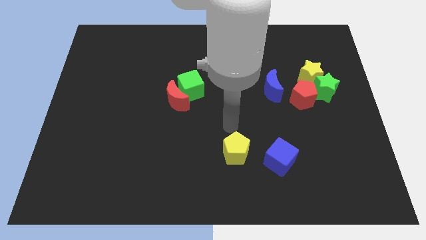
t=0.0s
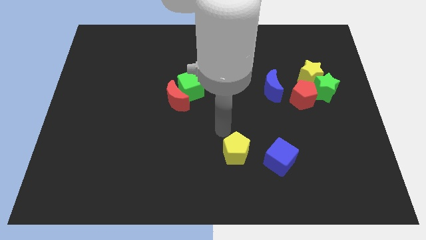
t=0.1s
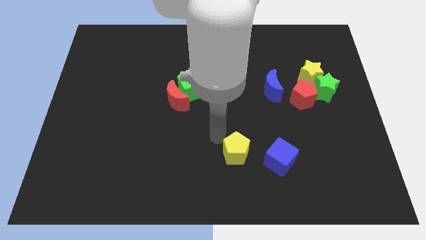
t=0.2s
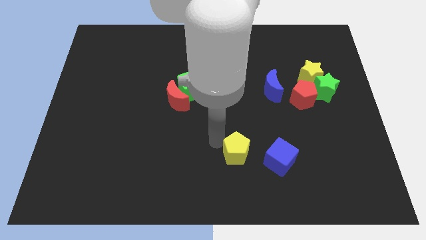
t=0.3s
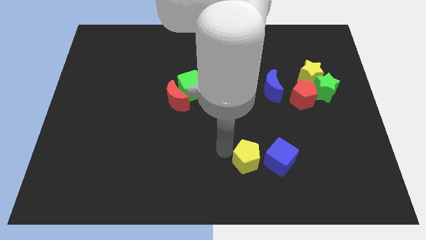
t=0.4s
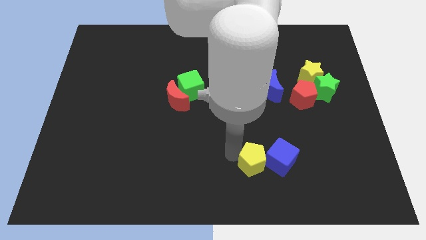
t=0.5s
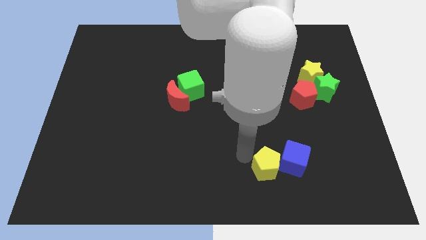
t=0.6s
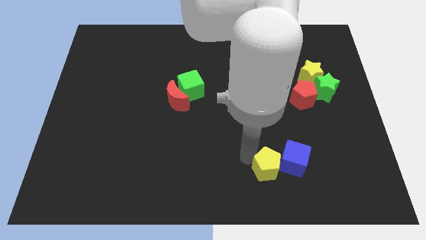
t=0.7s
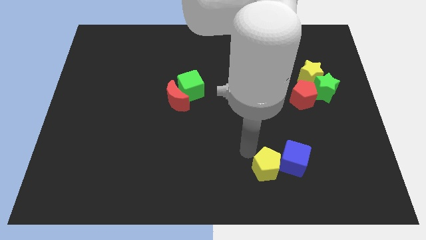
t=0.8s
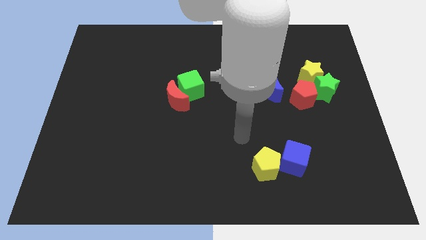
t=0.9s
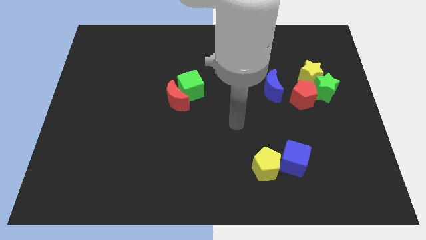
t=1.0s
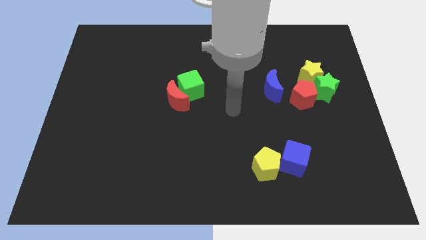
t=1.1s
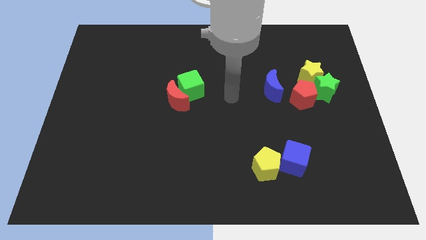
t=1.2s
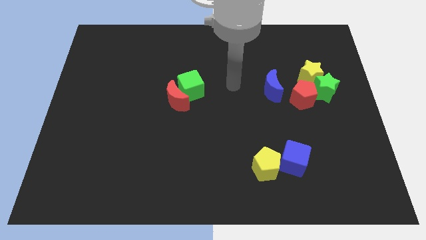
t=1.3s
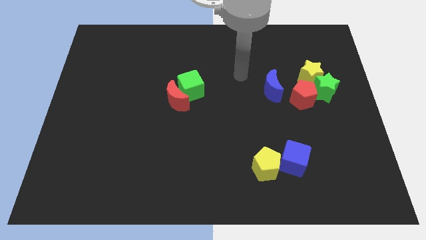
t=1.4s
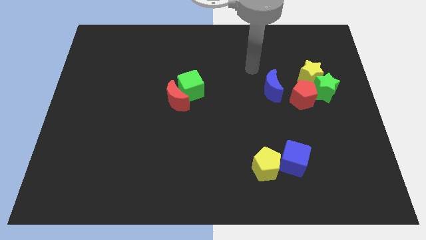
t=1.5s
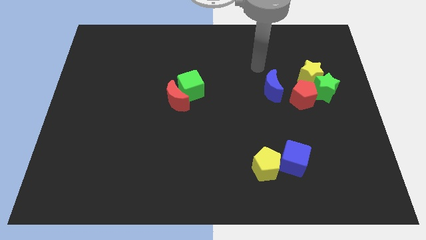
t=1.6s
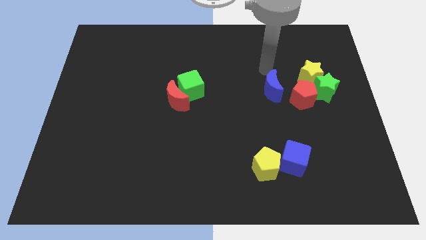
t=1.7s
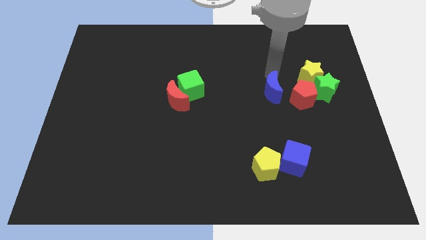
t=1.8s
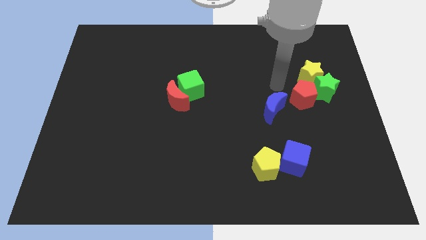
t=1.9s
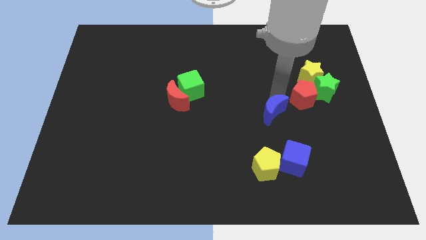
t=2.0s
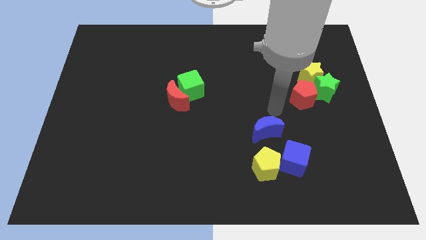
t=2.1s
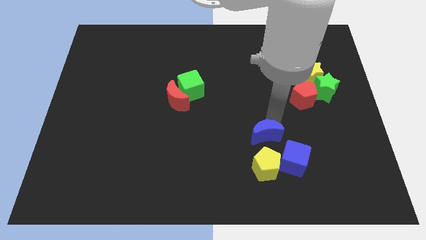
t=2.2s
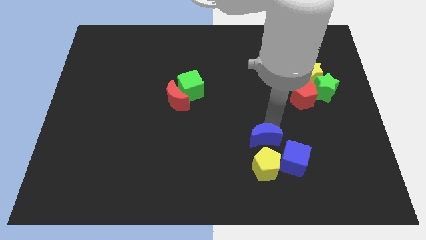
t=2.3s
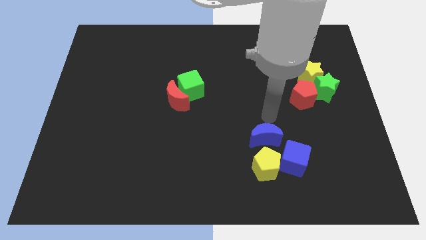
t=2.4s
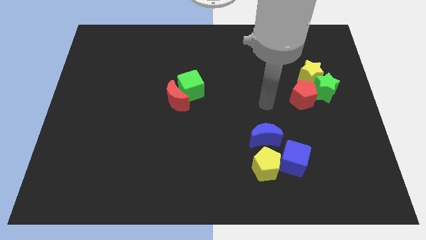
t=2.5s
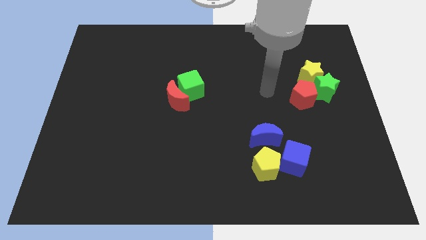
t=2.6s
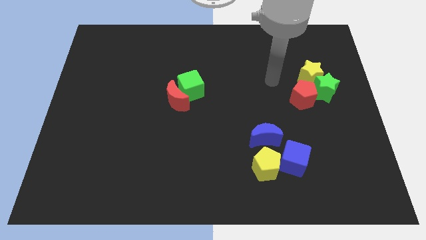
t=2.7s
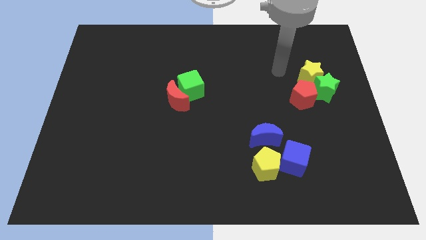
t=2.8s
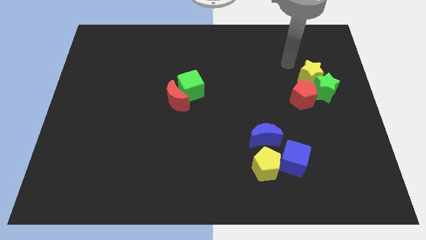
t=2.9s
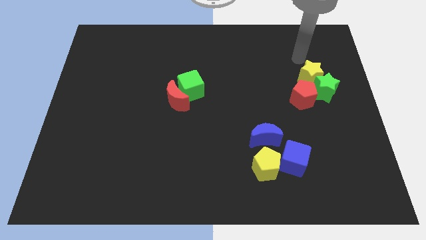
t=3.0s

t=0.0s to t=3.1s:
push the blue moon slightly downwards

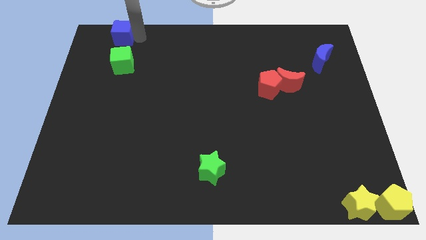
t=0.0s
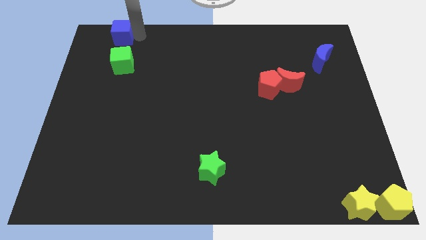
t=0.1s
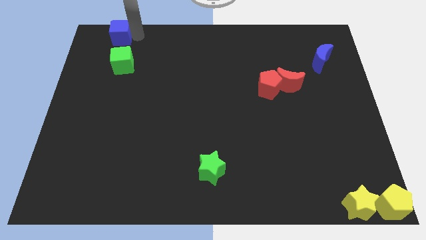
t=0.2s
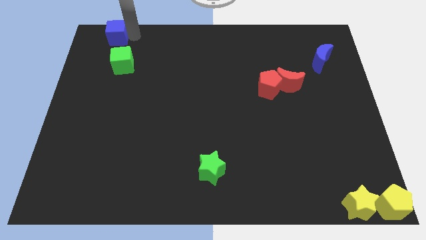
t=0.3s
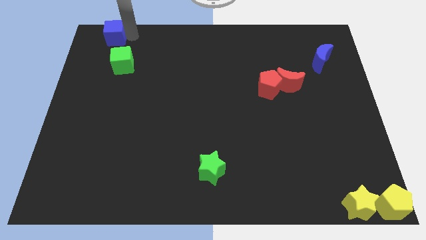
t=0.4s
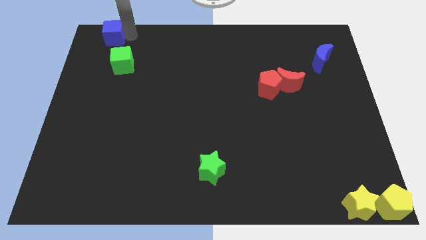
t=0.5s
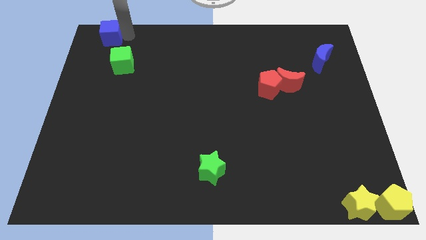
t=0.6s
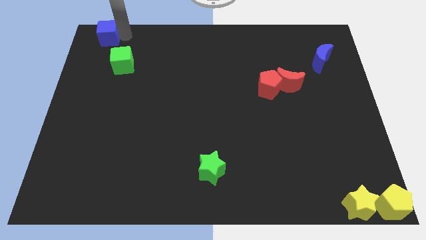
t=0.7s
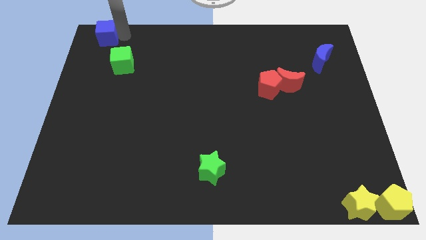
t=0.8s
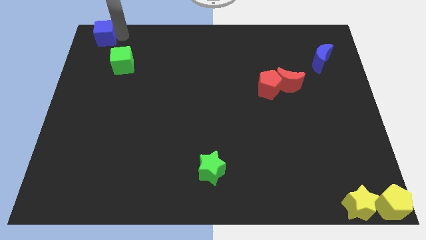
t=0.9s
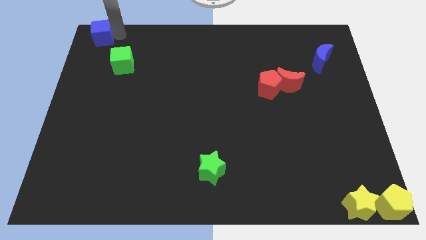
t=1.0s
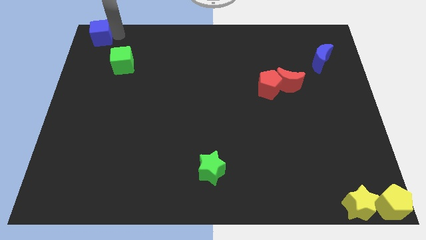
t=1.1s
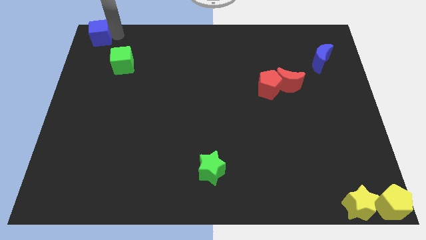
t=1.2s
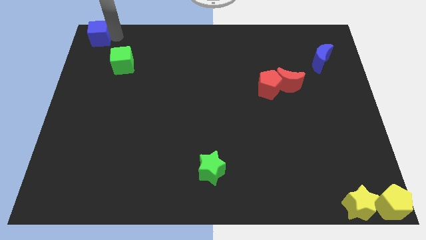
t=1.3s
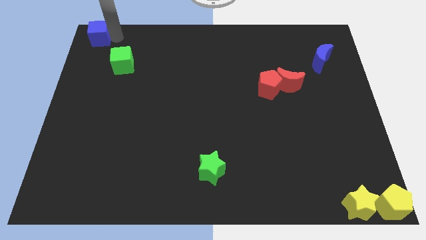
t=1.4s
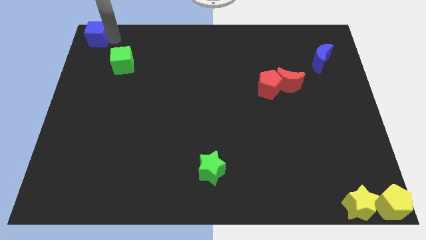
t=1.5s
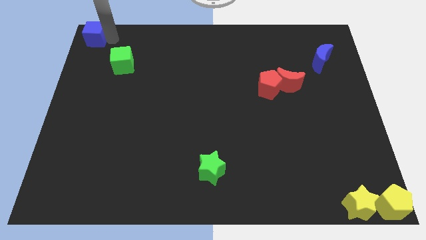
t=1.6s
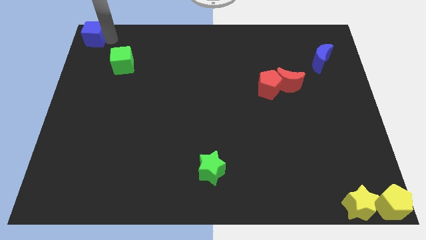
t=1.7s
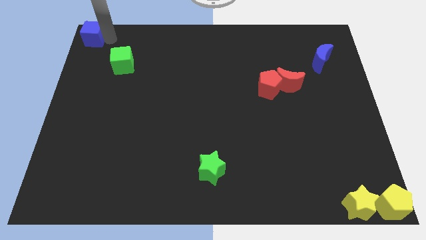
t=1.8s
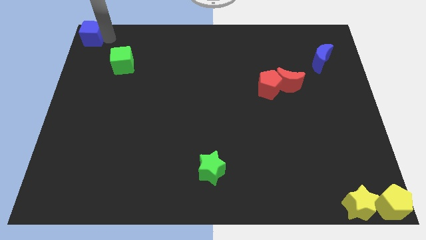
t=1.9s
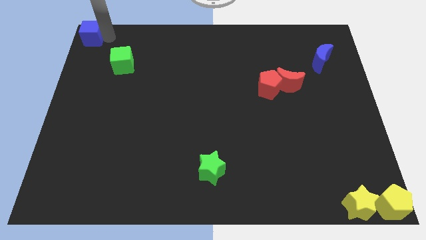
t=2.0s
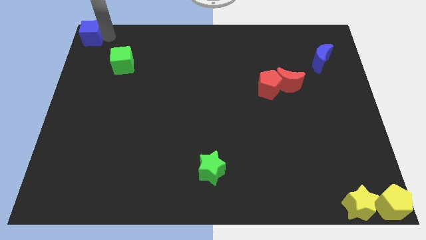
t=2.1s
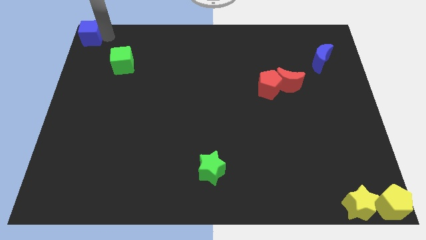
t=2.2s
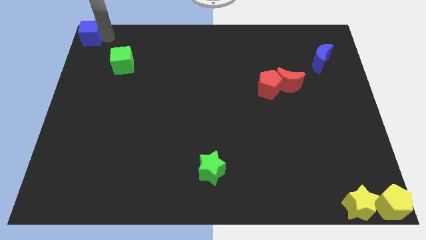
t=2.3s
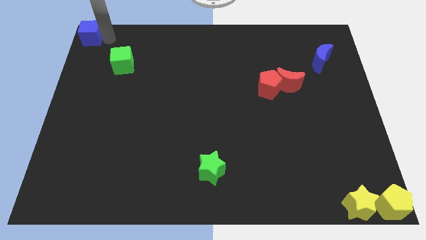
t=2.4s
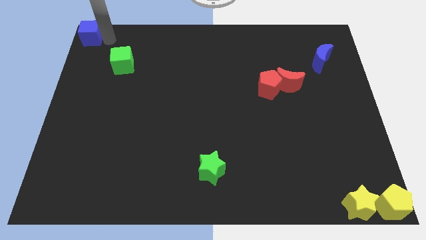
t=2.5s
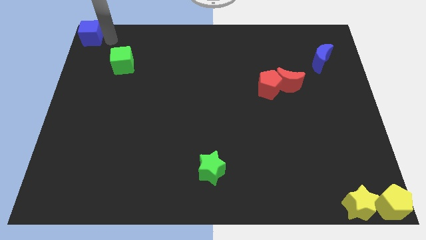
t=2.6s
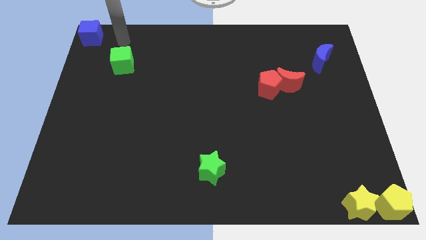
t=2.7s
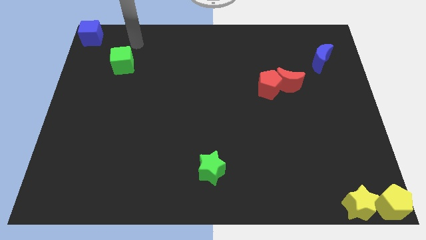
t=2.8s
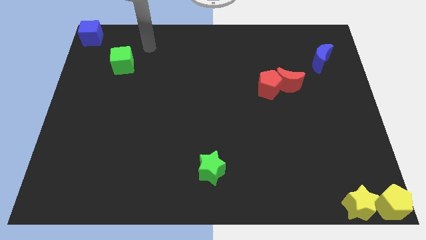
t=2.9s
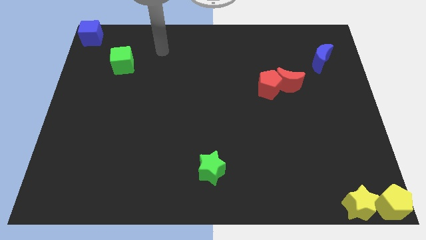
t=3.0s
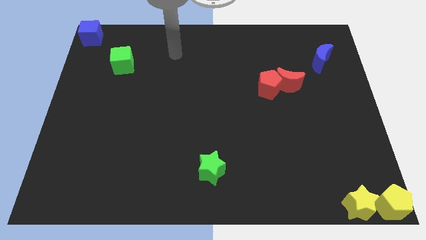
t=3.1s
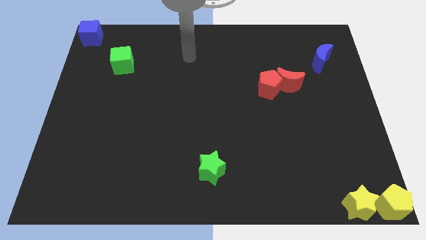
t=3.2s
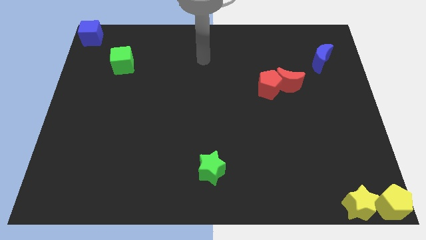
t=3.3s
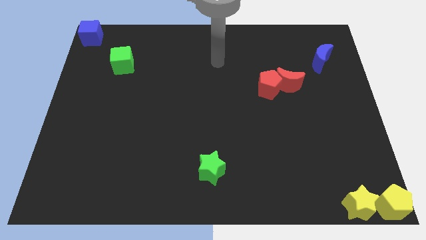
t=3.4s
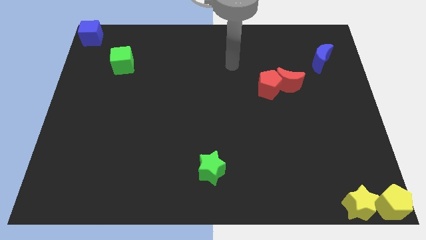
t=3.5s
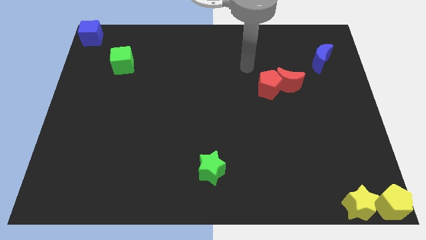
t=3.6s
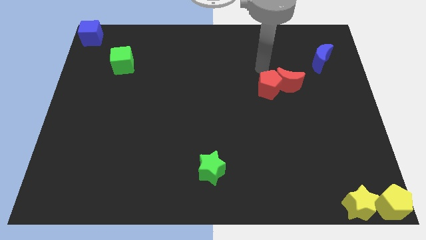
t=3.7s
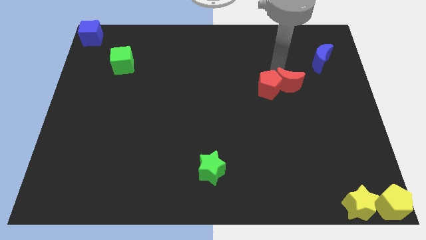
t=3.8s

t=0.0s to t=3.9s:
move the blue cube to the top left corner of the board

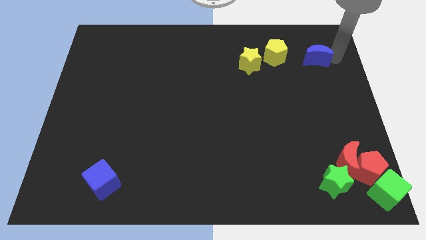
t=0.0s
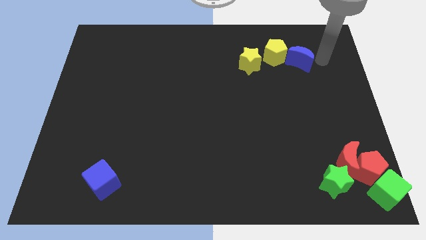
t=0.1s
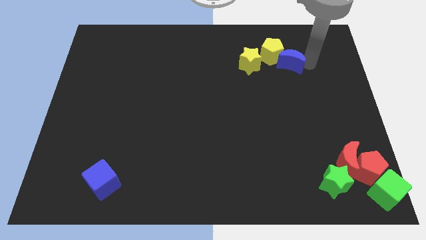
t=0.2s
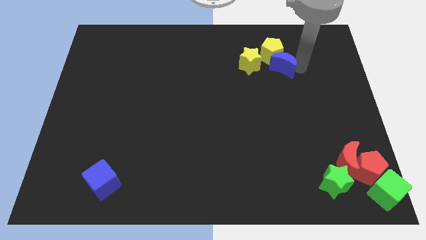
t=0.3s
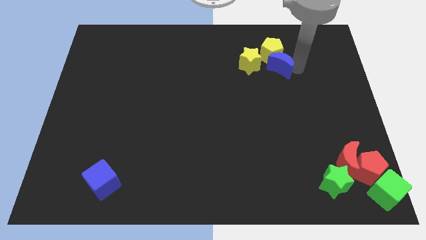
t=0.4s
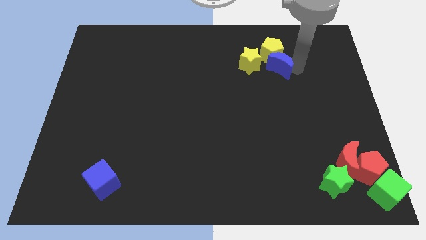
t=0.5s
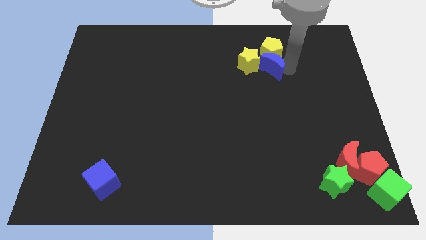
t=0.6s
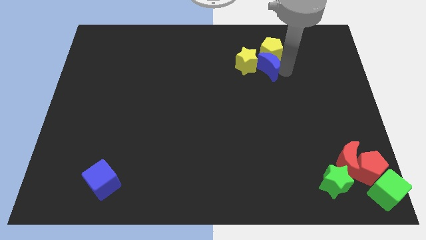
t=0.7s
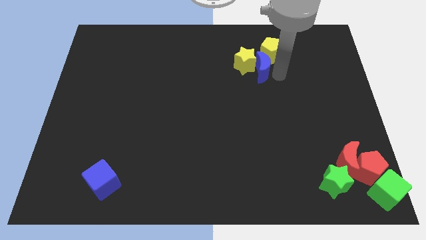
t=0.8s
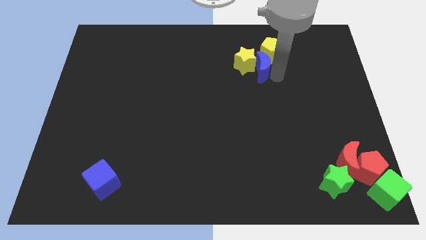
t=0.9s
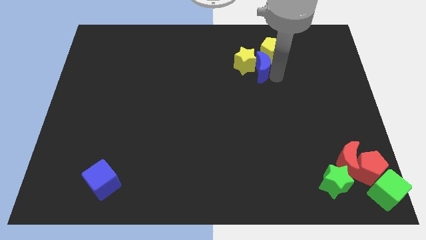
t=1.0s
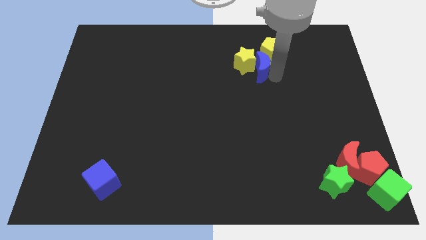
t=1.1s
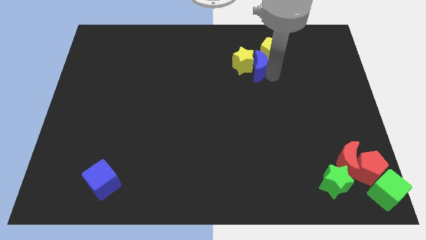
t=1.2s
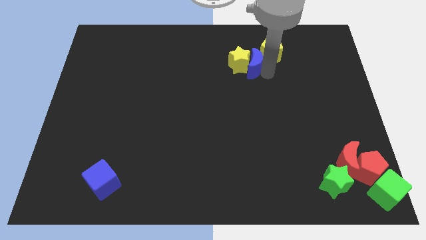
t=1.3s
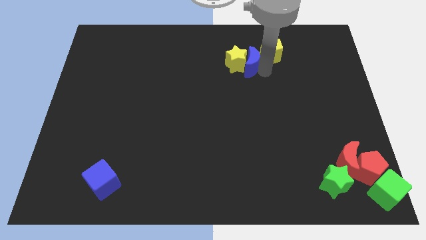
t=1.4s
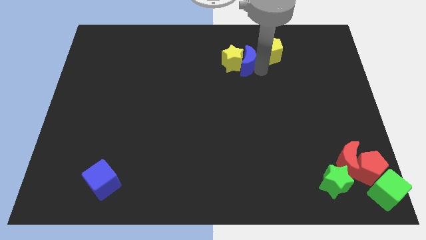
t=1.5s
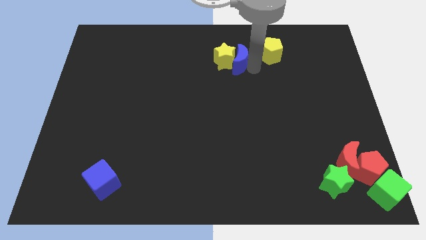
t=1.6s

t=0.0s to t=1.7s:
push the blue crescent into yellow star

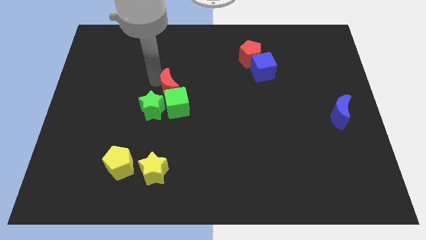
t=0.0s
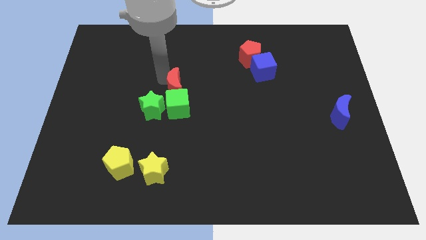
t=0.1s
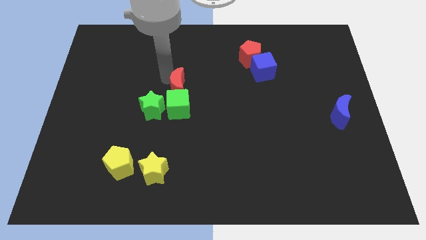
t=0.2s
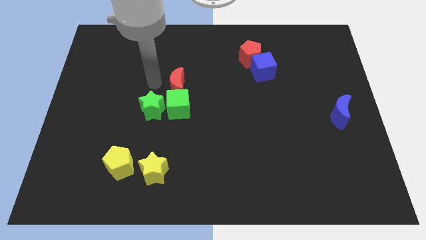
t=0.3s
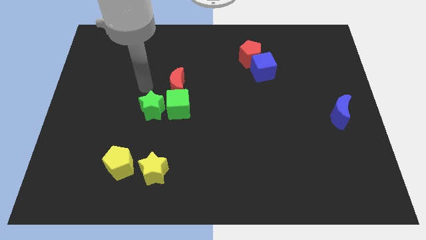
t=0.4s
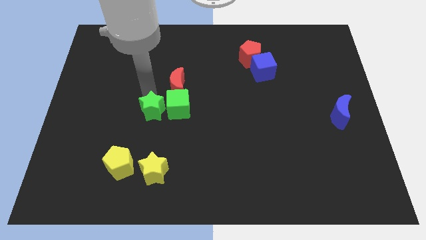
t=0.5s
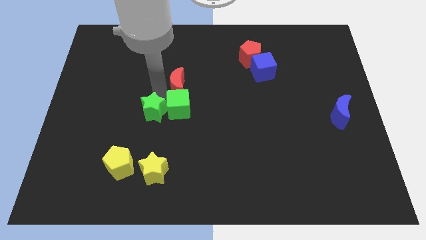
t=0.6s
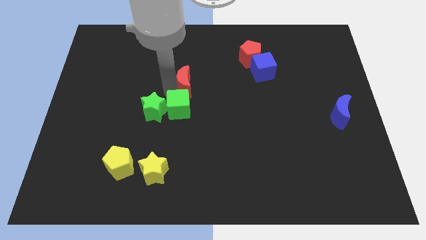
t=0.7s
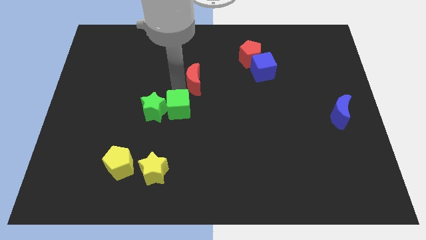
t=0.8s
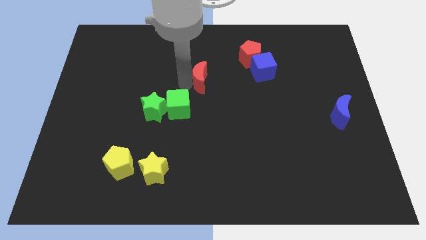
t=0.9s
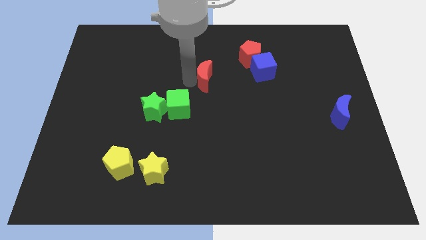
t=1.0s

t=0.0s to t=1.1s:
place the red moon left to the blue cube
